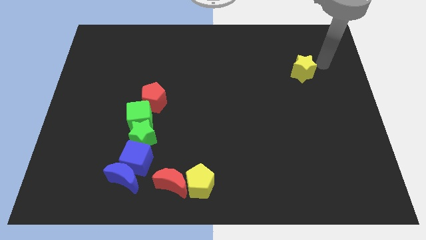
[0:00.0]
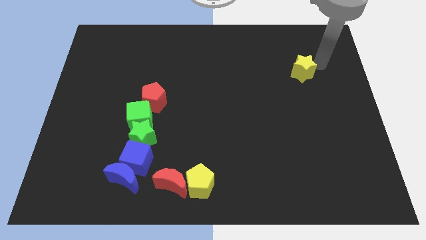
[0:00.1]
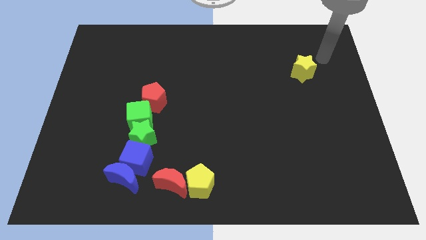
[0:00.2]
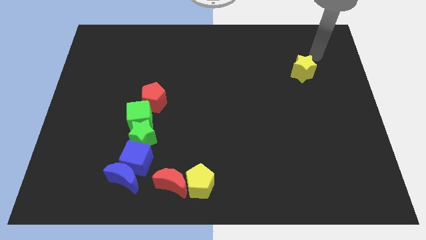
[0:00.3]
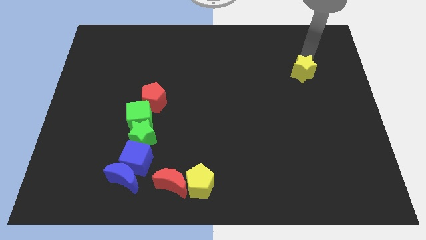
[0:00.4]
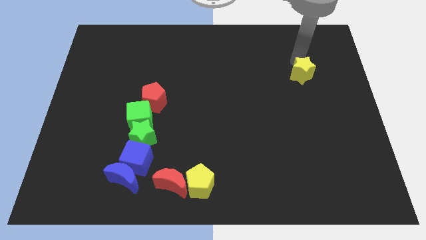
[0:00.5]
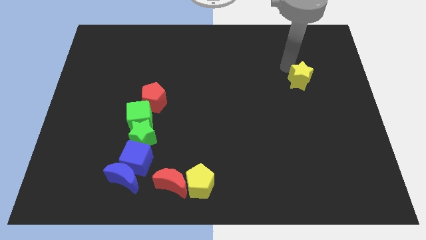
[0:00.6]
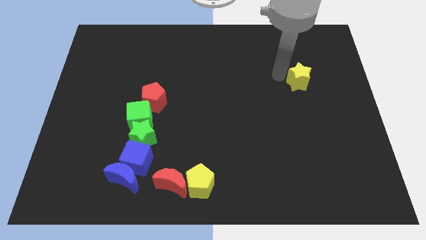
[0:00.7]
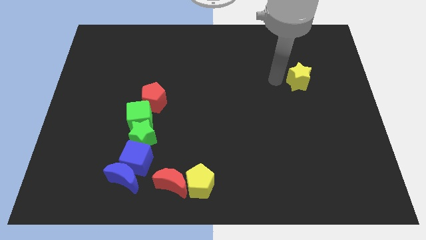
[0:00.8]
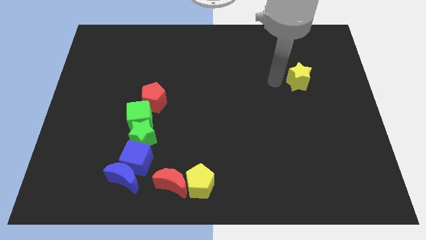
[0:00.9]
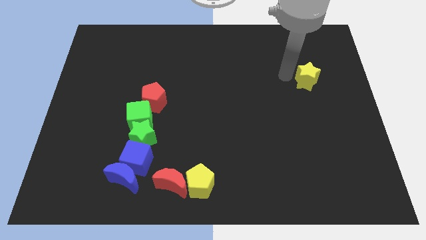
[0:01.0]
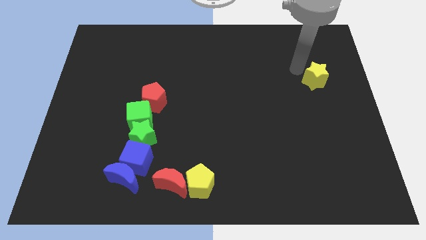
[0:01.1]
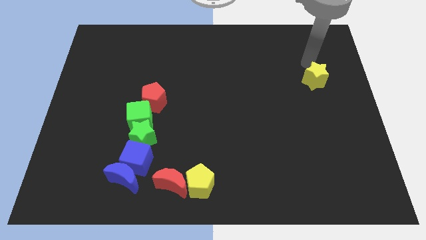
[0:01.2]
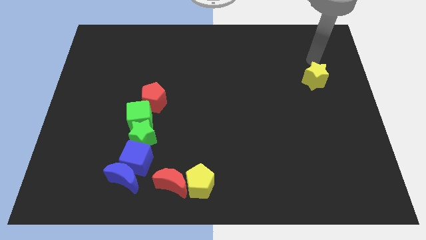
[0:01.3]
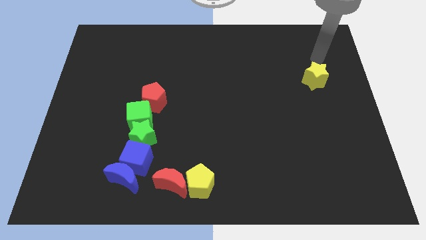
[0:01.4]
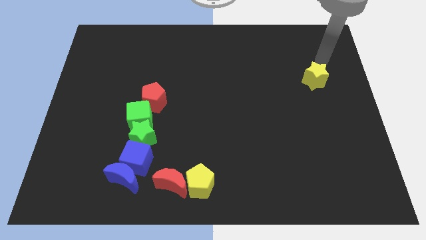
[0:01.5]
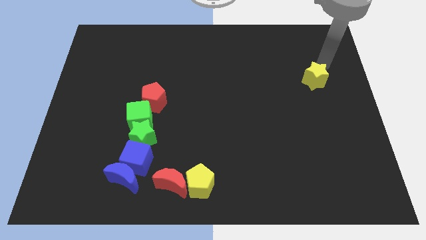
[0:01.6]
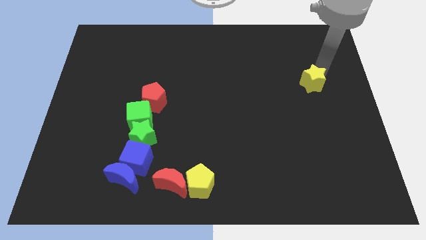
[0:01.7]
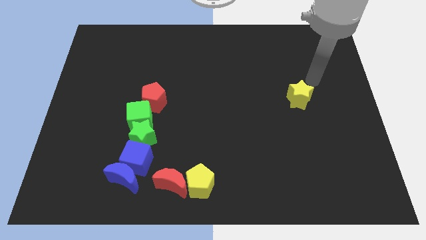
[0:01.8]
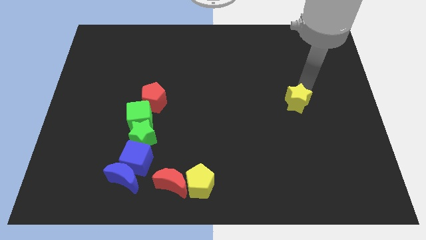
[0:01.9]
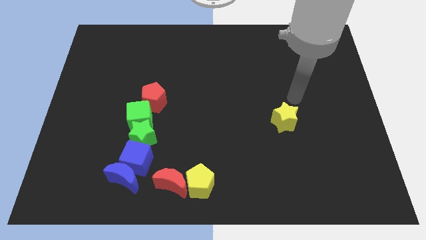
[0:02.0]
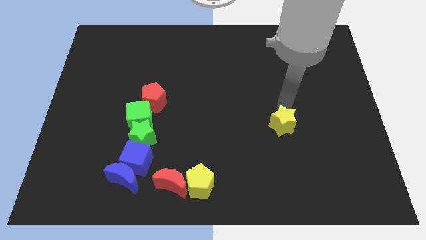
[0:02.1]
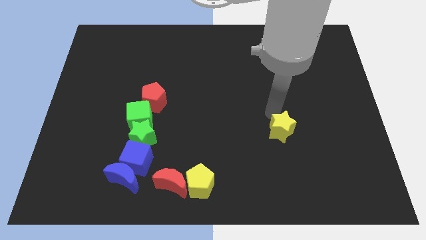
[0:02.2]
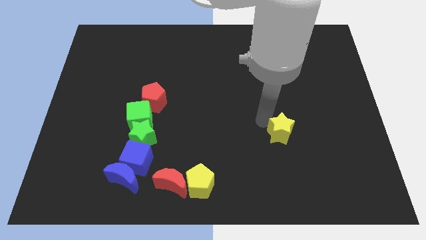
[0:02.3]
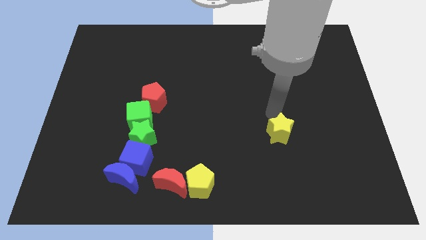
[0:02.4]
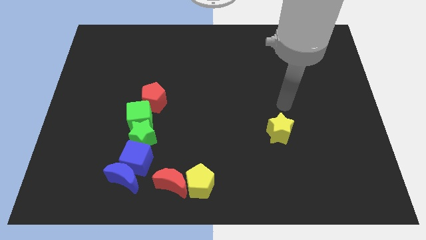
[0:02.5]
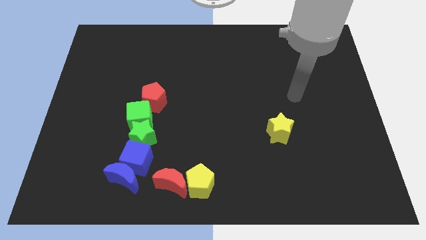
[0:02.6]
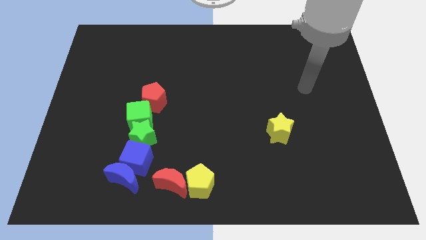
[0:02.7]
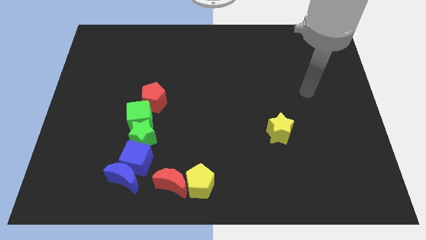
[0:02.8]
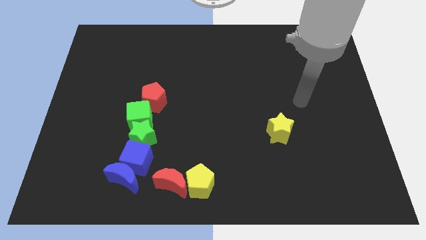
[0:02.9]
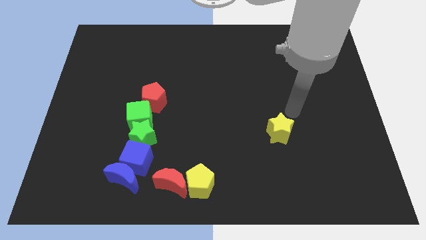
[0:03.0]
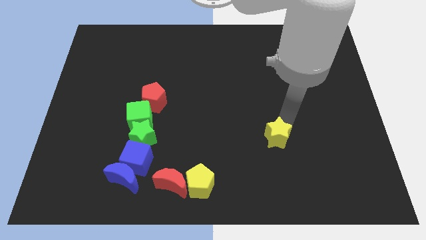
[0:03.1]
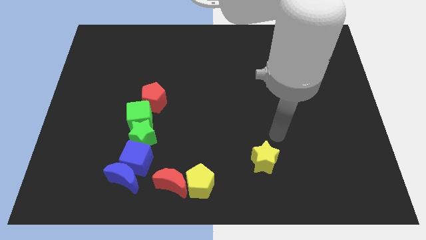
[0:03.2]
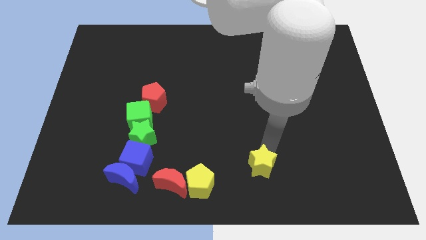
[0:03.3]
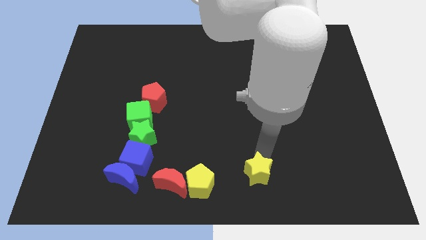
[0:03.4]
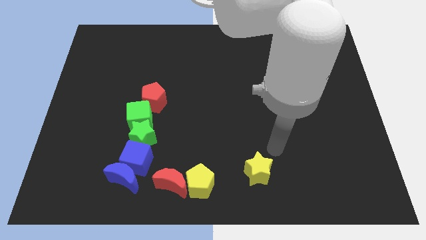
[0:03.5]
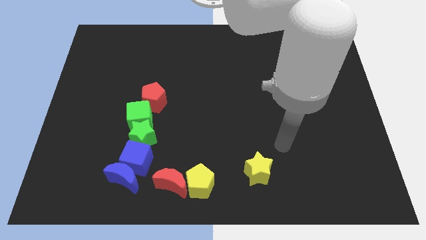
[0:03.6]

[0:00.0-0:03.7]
drag the yellow star diagonally to the bottom right side of the red pentagon

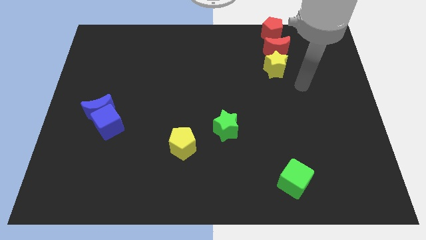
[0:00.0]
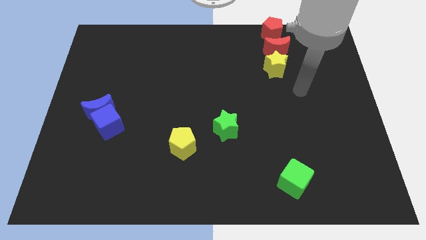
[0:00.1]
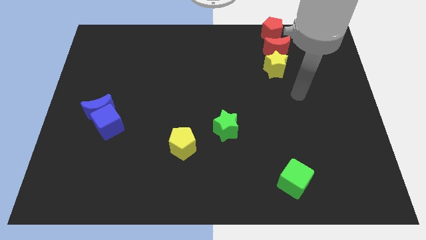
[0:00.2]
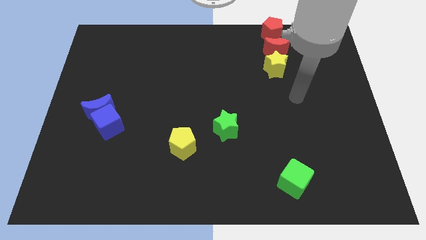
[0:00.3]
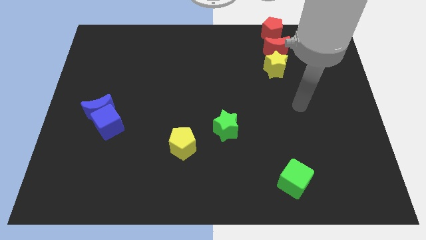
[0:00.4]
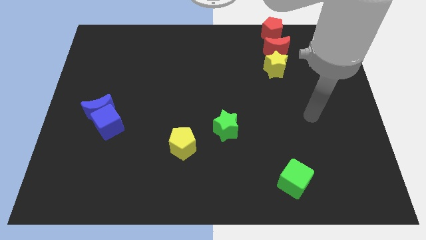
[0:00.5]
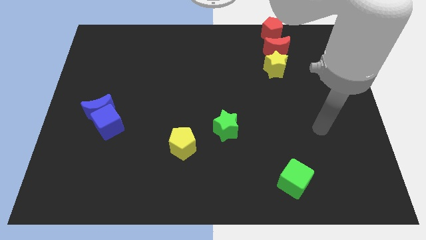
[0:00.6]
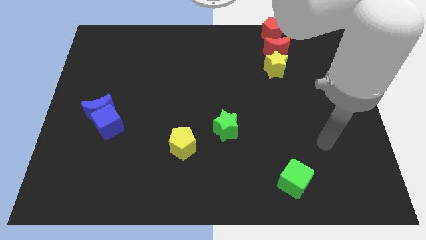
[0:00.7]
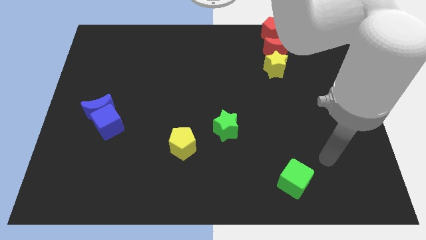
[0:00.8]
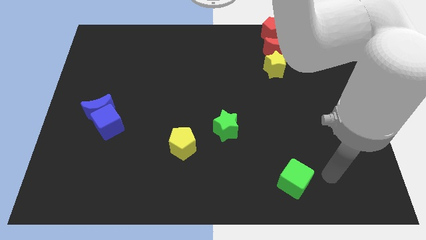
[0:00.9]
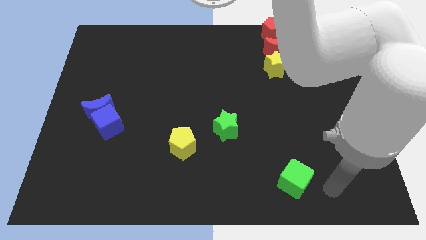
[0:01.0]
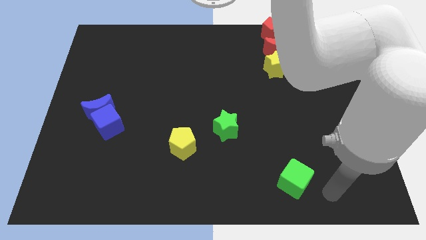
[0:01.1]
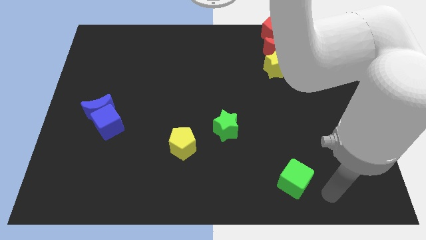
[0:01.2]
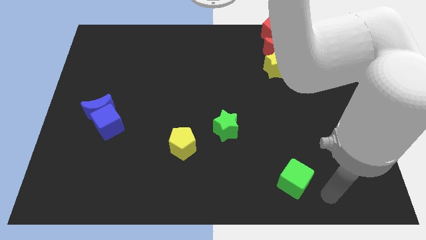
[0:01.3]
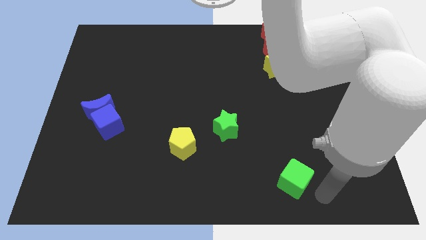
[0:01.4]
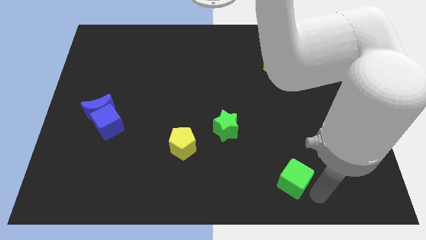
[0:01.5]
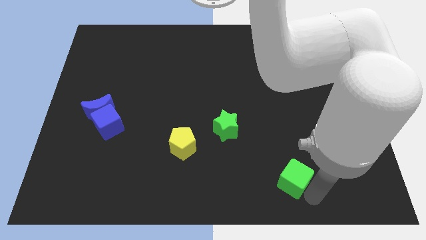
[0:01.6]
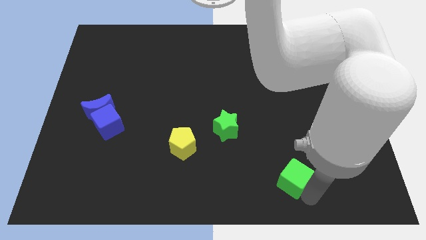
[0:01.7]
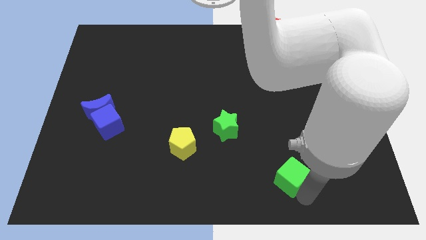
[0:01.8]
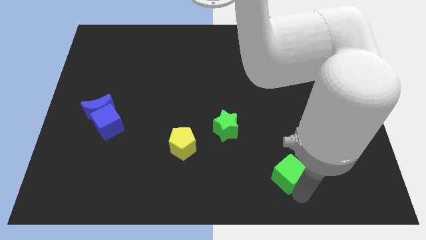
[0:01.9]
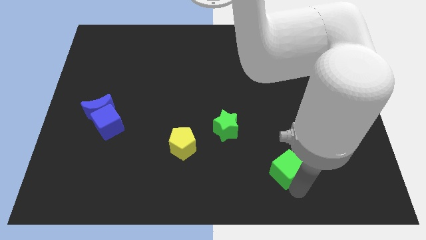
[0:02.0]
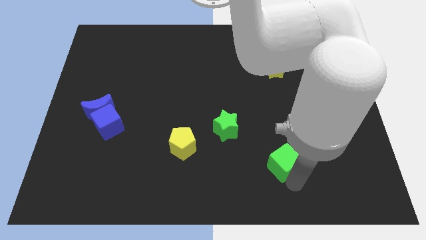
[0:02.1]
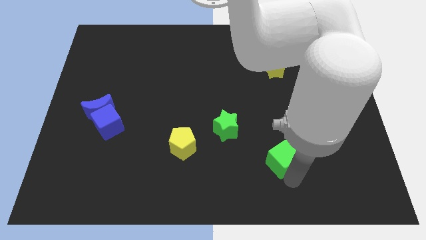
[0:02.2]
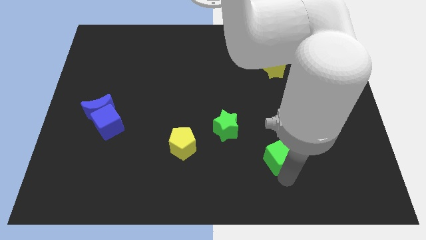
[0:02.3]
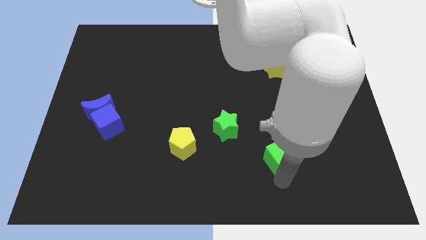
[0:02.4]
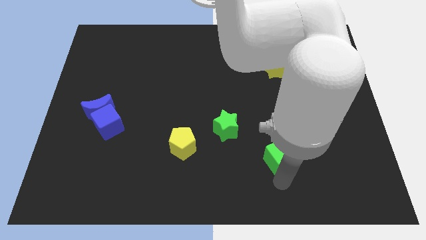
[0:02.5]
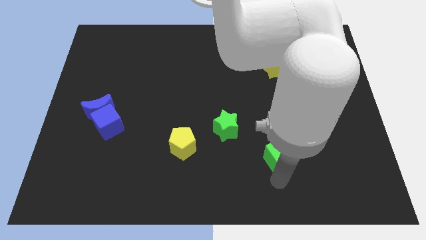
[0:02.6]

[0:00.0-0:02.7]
point your arm below green cube

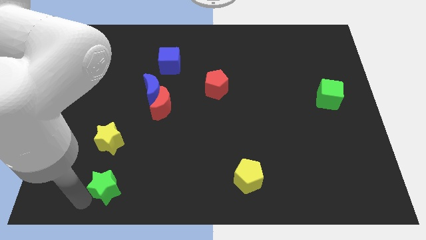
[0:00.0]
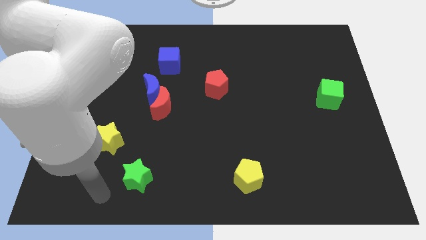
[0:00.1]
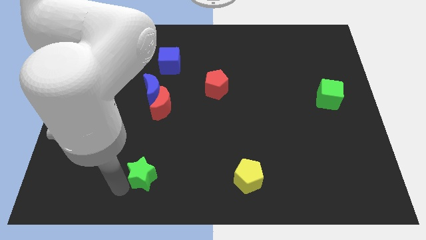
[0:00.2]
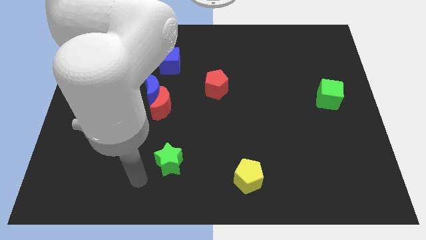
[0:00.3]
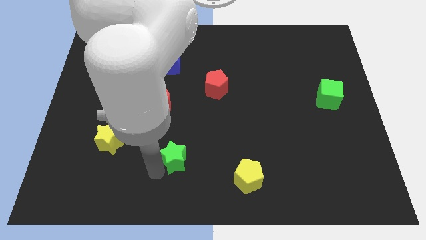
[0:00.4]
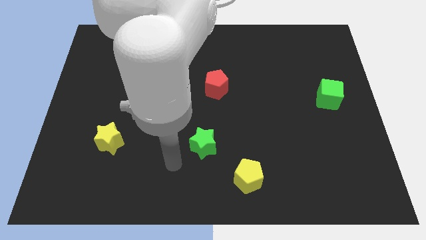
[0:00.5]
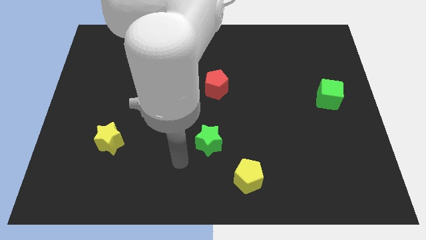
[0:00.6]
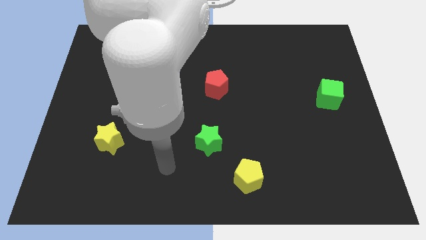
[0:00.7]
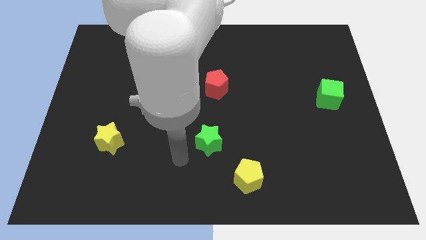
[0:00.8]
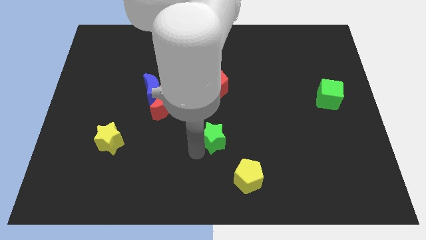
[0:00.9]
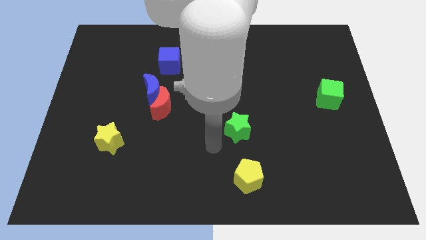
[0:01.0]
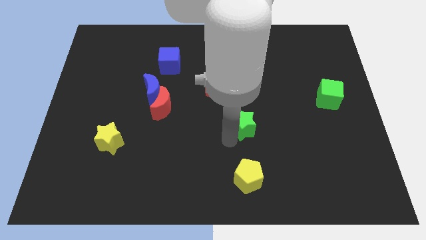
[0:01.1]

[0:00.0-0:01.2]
move the green star to the middle of the board

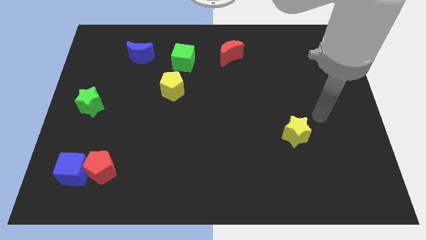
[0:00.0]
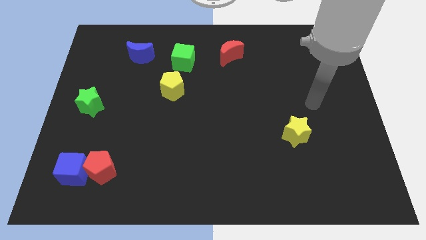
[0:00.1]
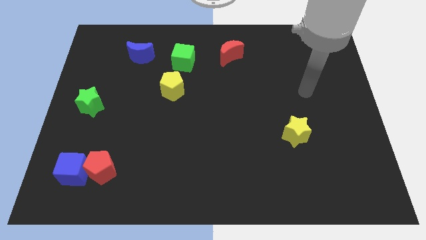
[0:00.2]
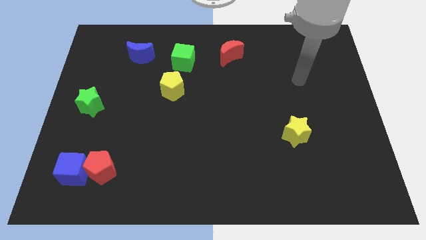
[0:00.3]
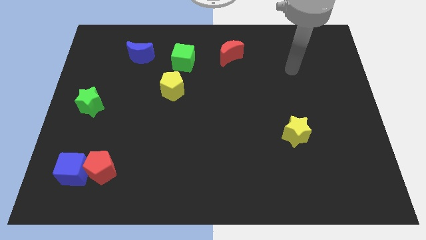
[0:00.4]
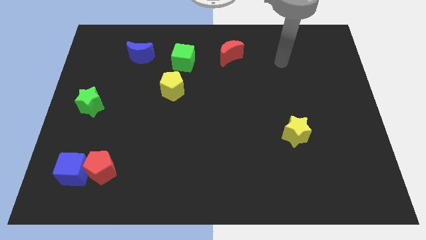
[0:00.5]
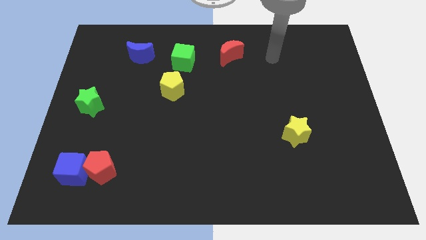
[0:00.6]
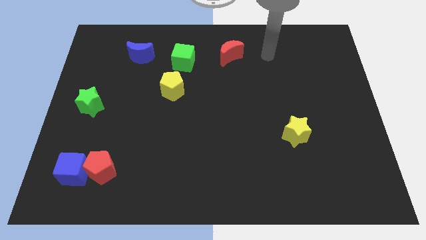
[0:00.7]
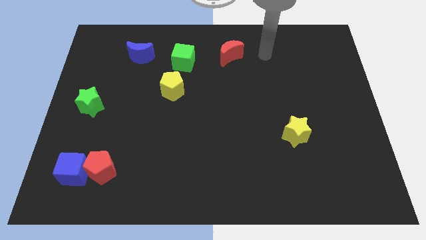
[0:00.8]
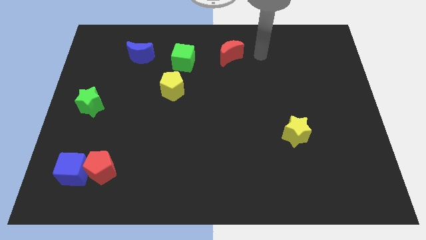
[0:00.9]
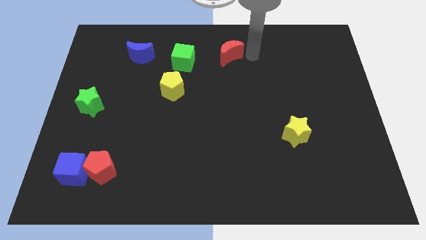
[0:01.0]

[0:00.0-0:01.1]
move your arm close to the right side of the red moon

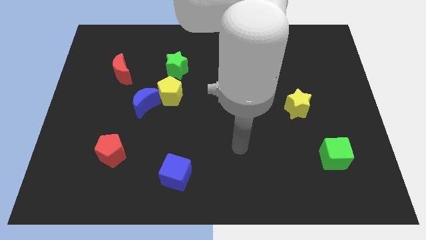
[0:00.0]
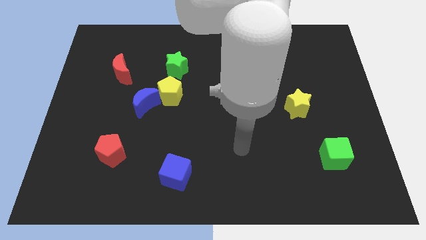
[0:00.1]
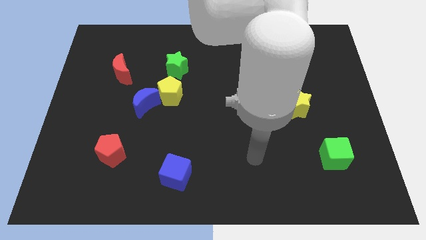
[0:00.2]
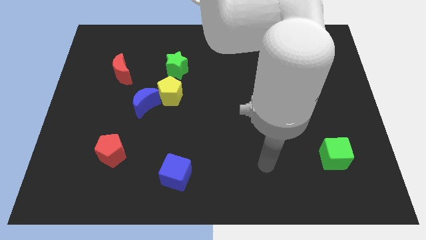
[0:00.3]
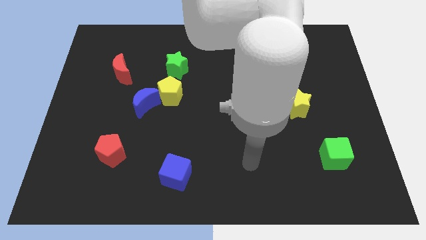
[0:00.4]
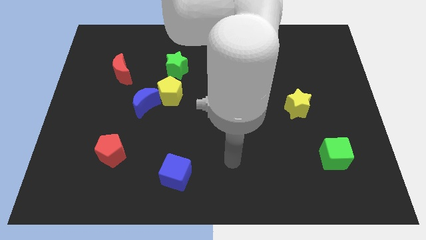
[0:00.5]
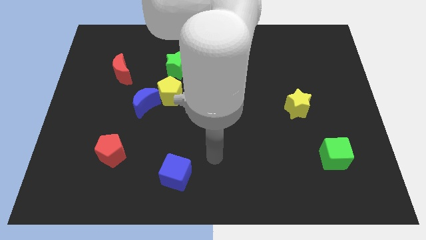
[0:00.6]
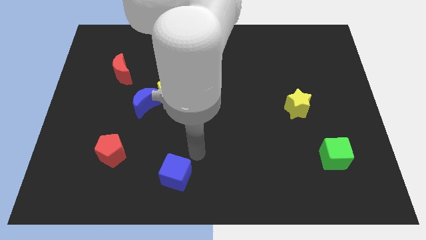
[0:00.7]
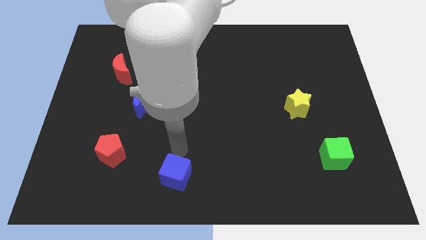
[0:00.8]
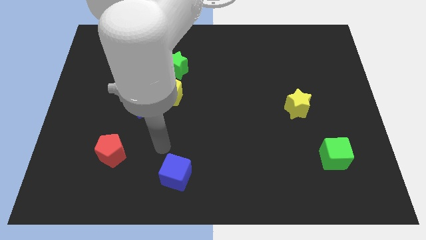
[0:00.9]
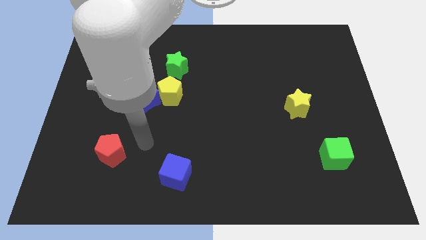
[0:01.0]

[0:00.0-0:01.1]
slide your arm to the right of red pentagon
